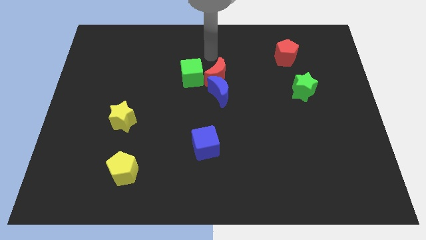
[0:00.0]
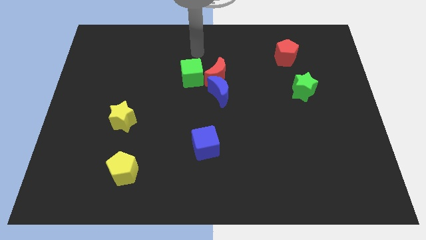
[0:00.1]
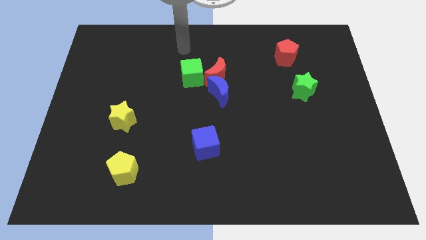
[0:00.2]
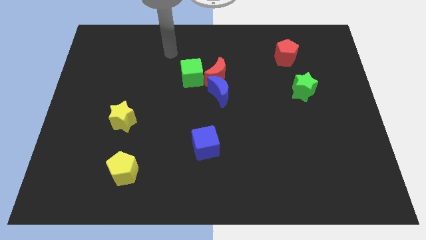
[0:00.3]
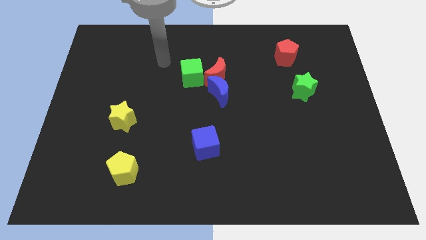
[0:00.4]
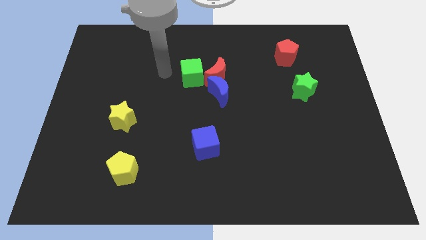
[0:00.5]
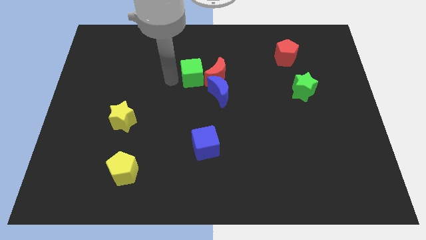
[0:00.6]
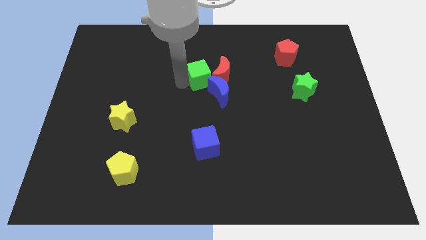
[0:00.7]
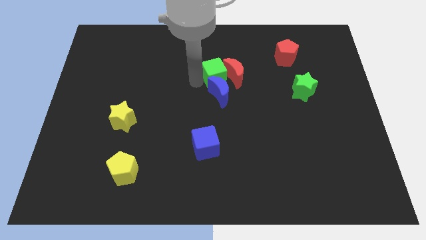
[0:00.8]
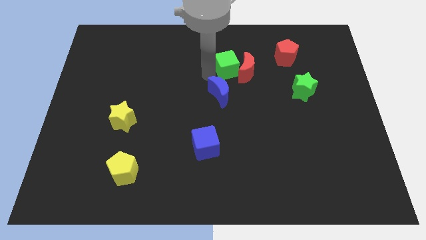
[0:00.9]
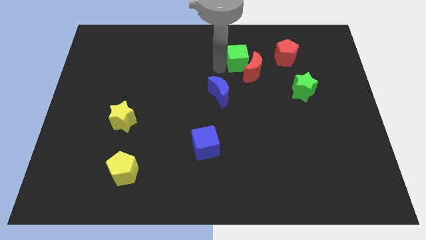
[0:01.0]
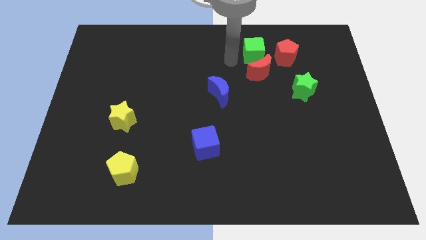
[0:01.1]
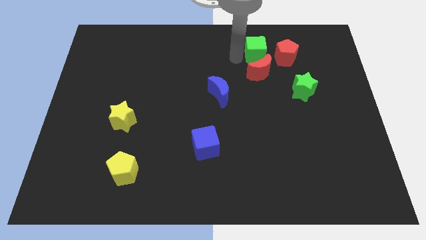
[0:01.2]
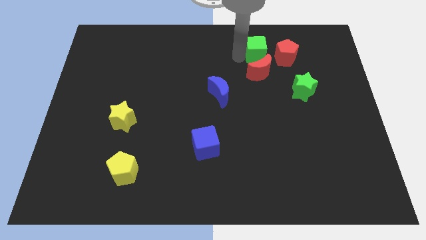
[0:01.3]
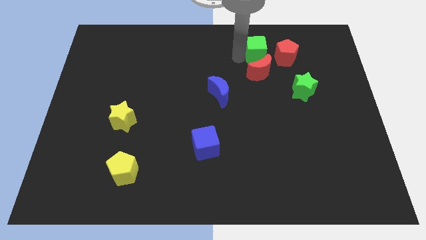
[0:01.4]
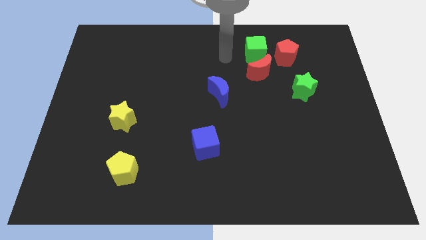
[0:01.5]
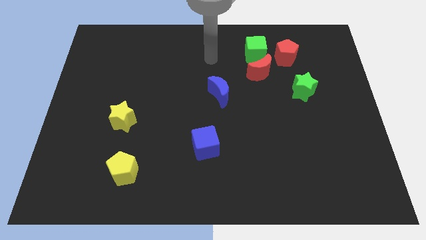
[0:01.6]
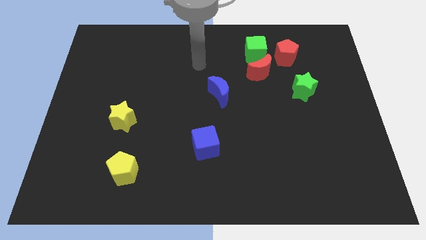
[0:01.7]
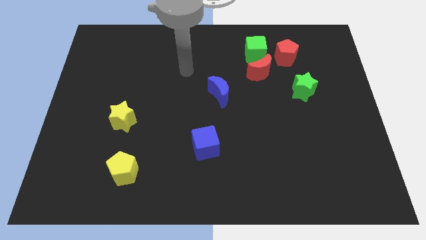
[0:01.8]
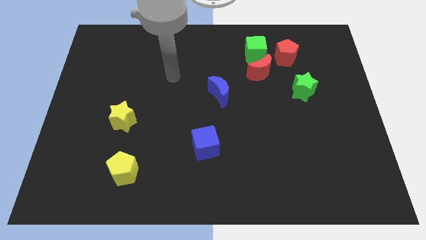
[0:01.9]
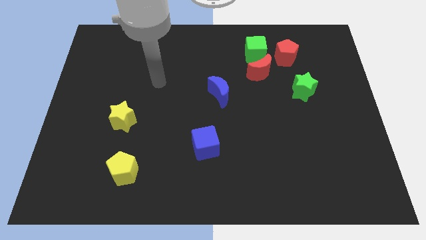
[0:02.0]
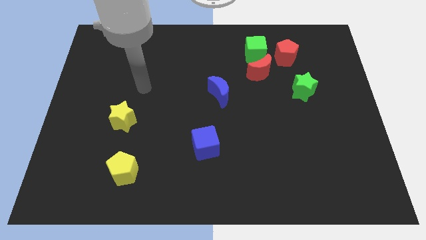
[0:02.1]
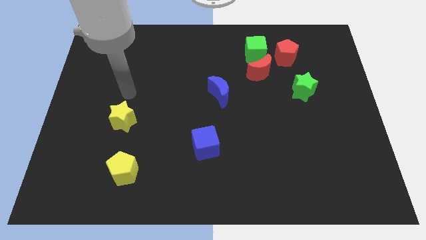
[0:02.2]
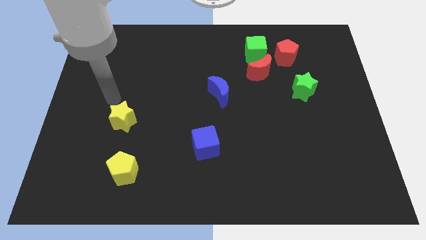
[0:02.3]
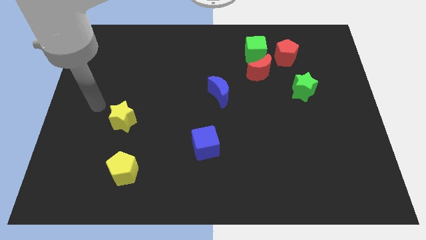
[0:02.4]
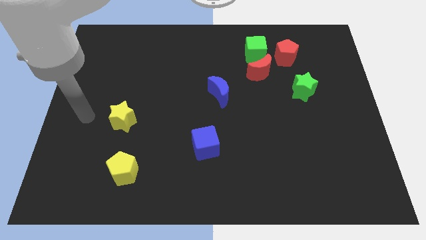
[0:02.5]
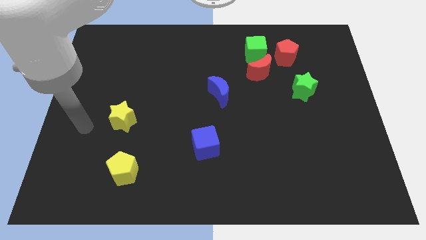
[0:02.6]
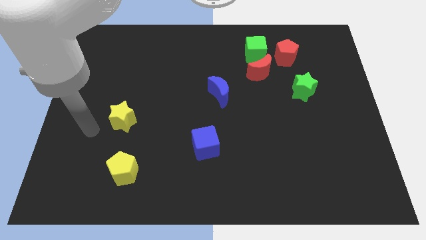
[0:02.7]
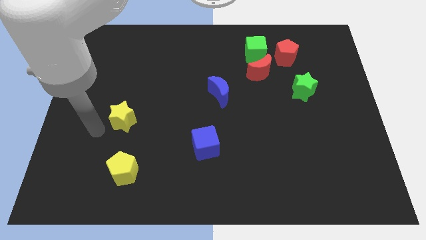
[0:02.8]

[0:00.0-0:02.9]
place the arm to the left of yellow star

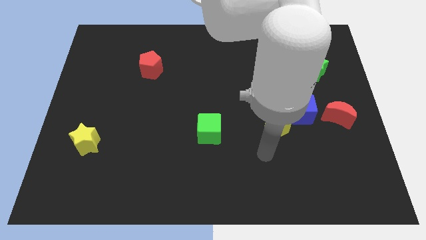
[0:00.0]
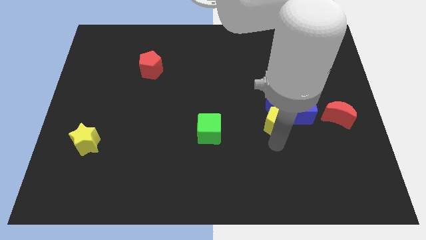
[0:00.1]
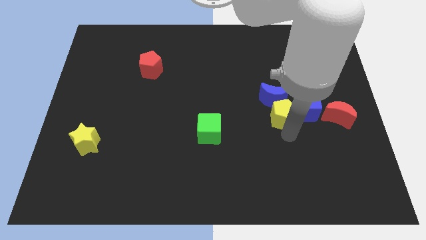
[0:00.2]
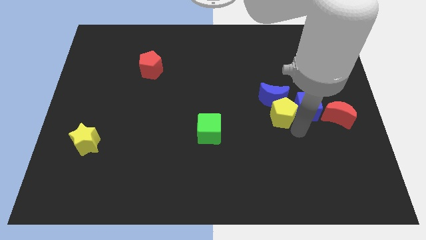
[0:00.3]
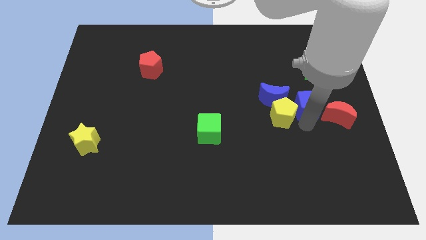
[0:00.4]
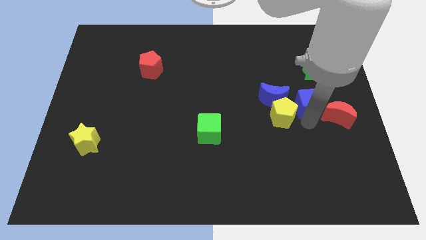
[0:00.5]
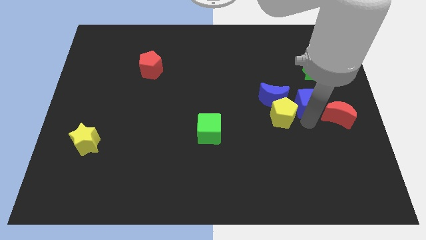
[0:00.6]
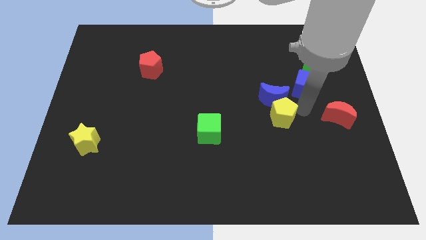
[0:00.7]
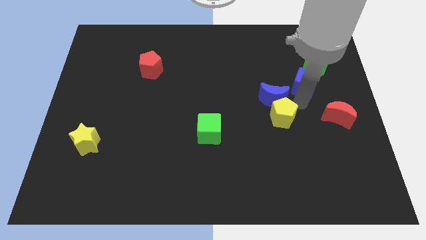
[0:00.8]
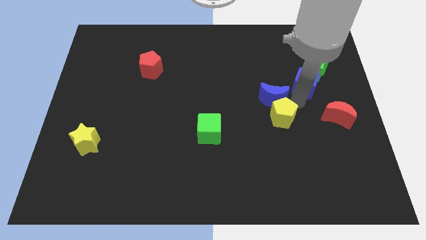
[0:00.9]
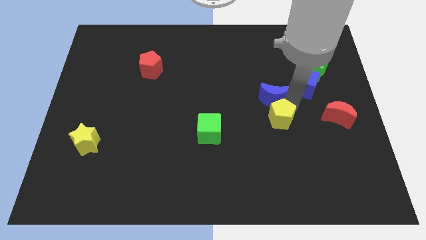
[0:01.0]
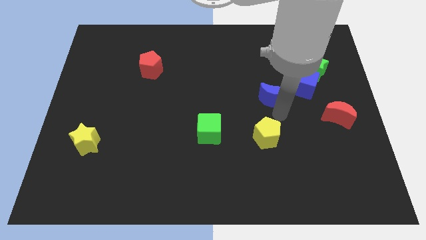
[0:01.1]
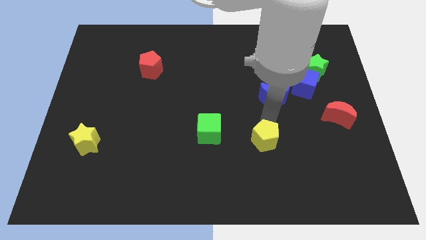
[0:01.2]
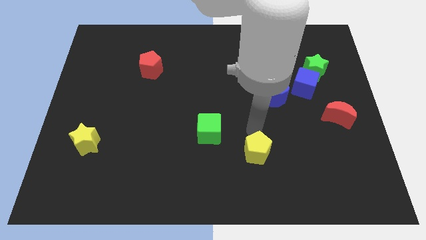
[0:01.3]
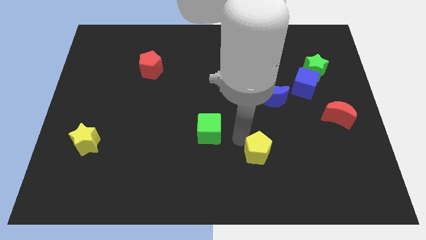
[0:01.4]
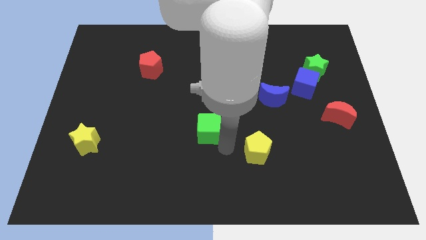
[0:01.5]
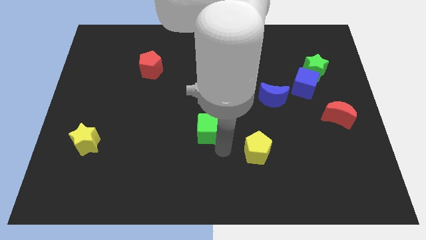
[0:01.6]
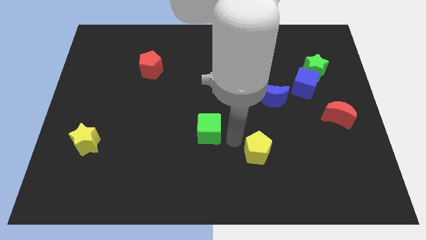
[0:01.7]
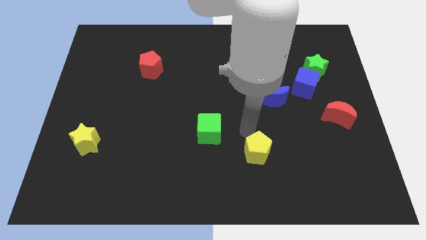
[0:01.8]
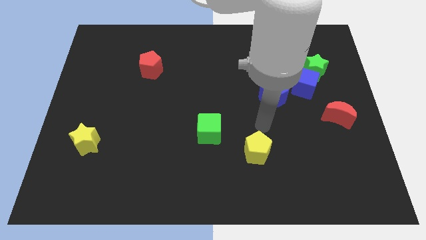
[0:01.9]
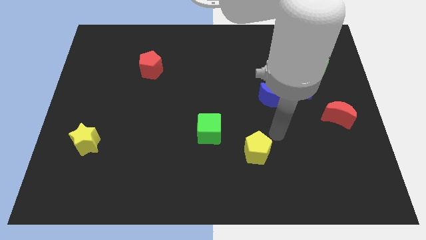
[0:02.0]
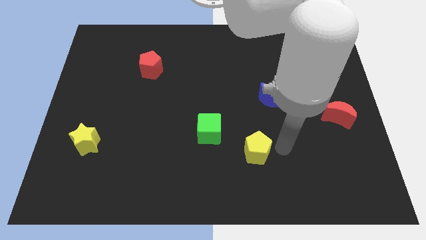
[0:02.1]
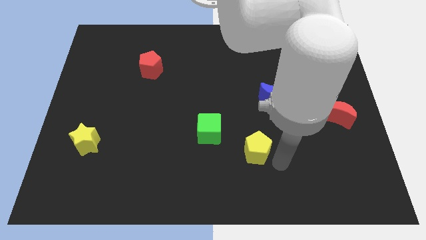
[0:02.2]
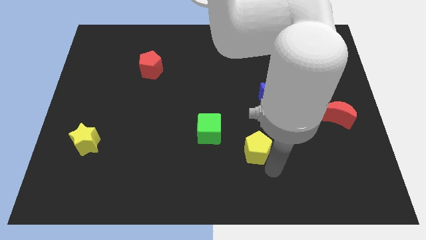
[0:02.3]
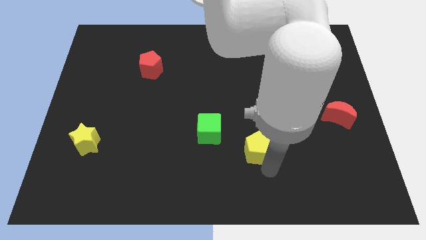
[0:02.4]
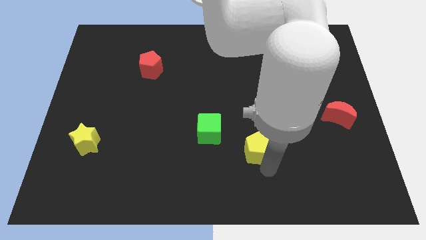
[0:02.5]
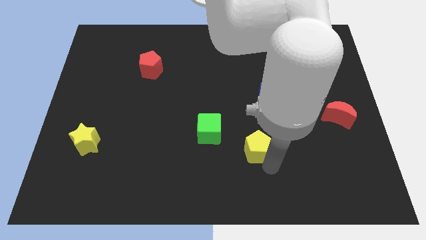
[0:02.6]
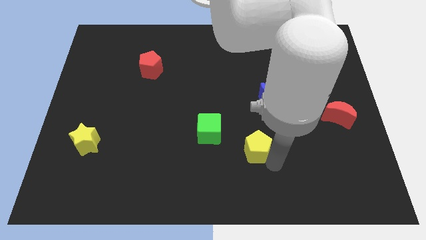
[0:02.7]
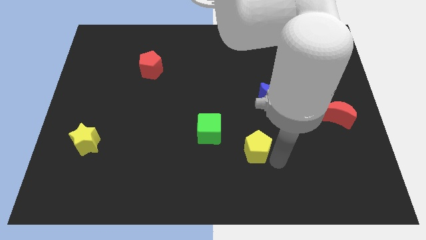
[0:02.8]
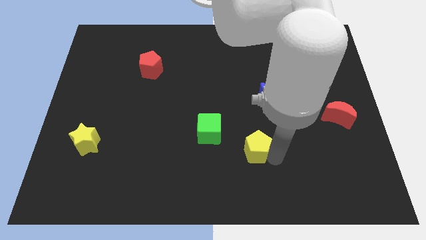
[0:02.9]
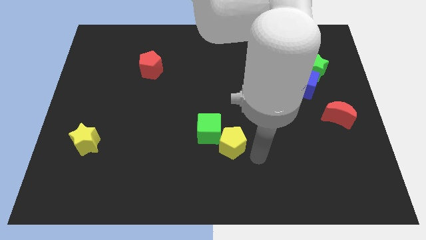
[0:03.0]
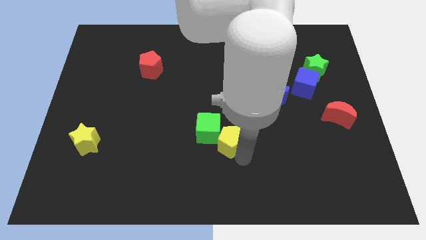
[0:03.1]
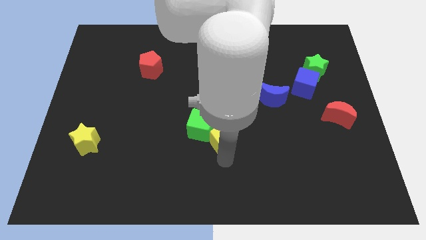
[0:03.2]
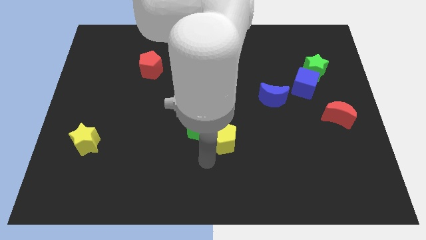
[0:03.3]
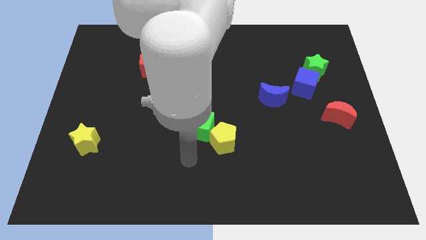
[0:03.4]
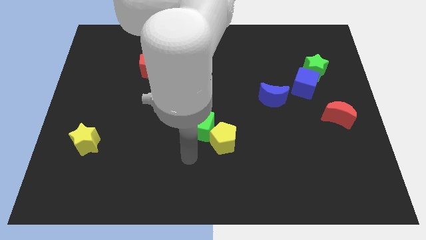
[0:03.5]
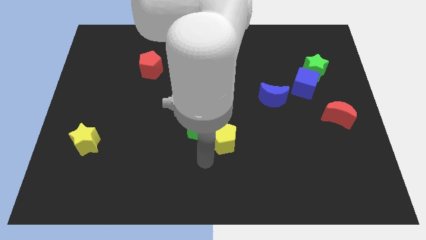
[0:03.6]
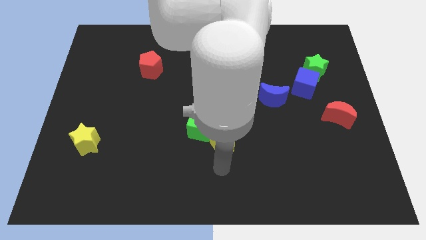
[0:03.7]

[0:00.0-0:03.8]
go and point your hand below the green cube and the yellow pentagon

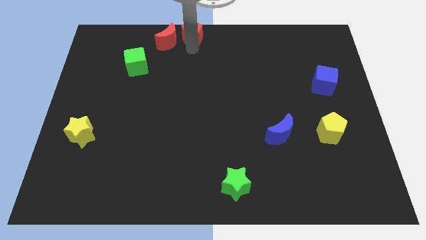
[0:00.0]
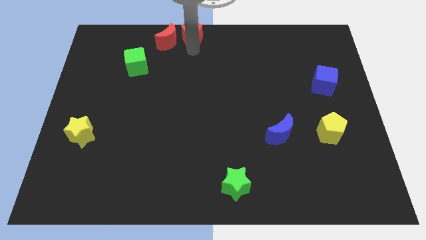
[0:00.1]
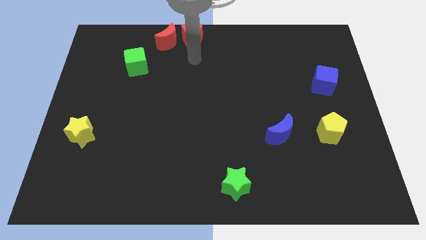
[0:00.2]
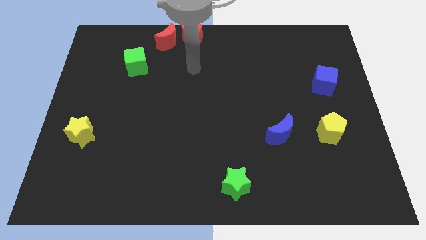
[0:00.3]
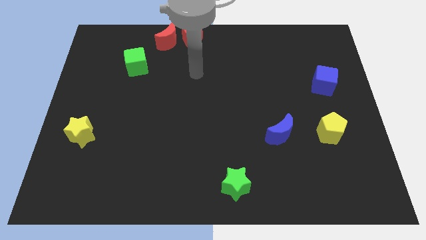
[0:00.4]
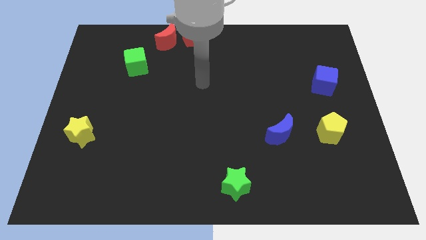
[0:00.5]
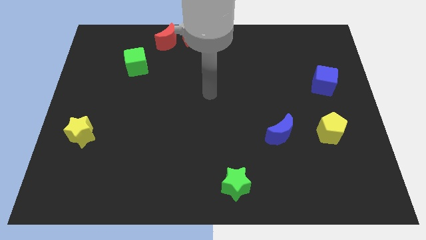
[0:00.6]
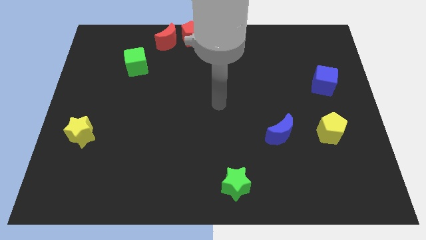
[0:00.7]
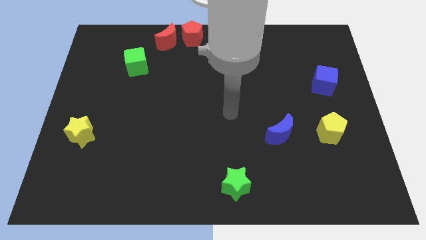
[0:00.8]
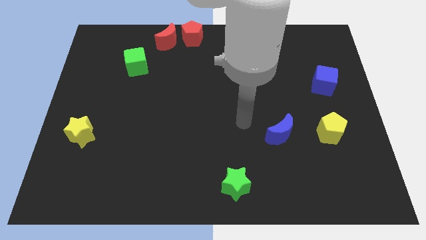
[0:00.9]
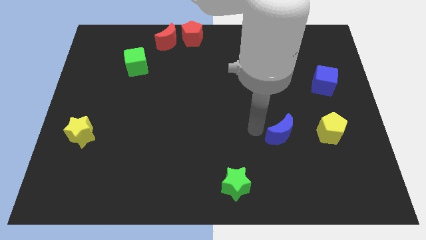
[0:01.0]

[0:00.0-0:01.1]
move the arm close to the blue moon

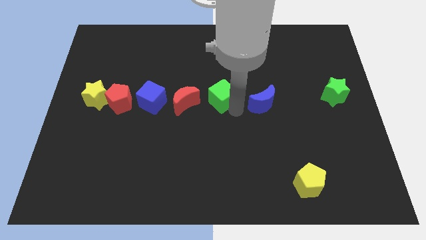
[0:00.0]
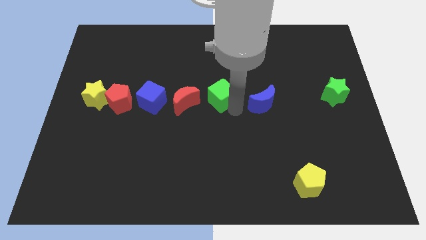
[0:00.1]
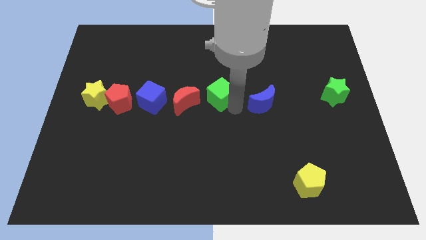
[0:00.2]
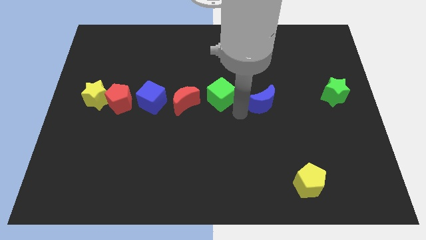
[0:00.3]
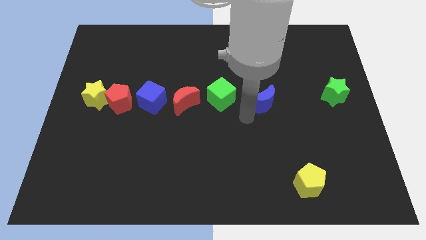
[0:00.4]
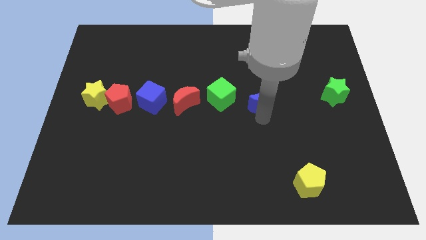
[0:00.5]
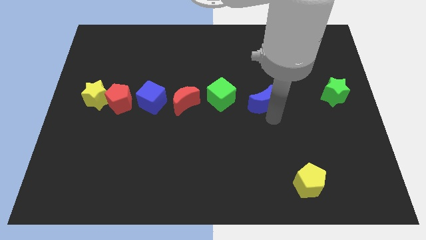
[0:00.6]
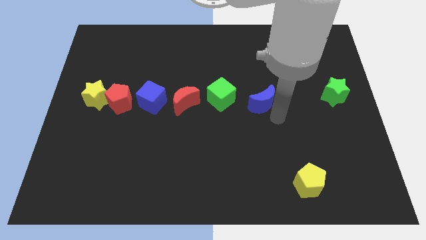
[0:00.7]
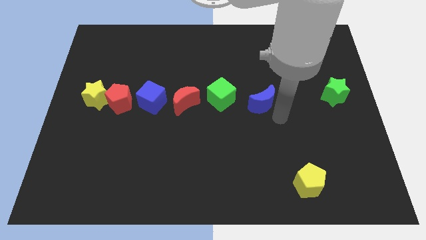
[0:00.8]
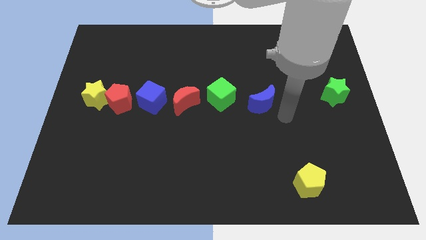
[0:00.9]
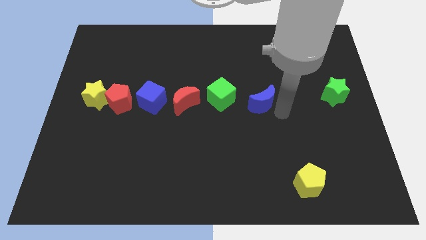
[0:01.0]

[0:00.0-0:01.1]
move the arm away from the green cube
